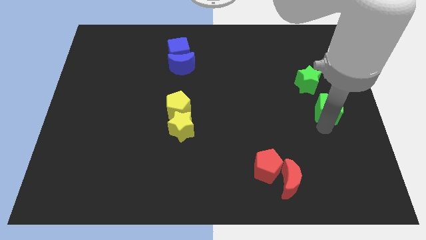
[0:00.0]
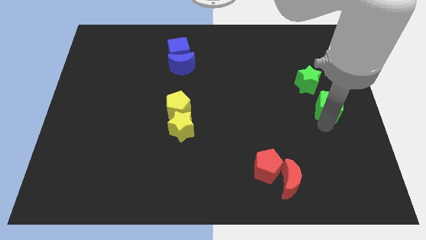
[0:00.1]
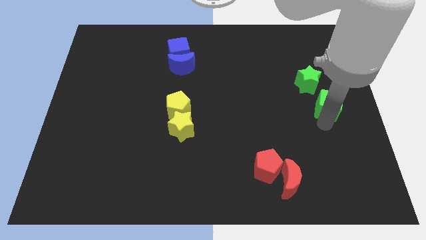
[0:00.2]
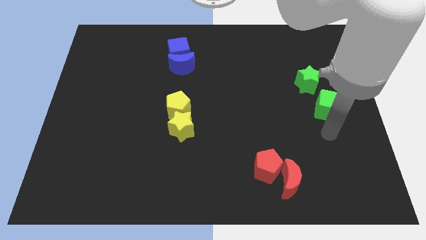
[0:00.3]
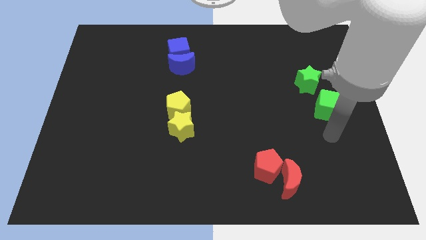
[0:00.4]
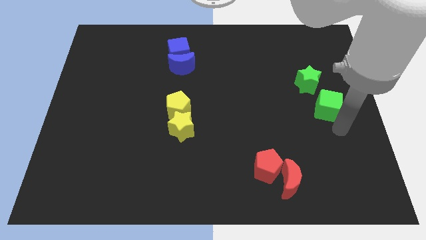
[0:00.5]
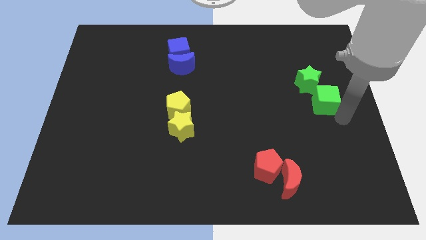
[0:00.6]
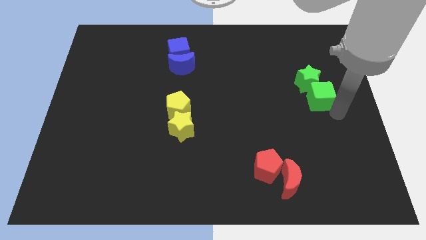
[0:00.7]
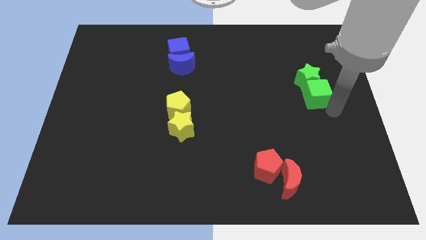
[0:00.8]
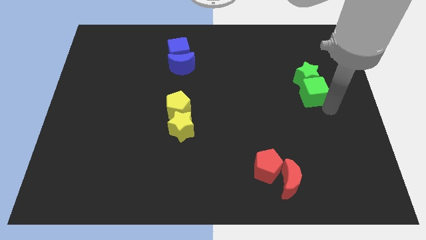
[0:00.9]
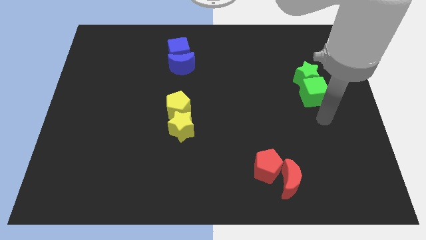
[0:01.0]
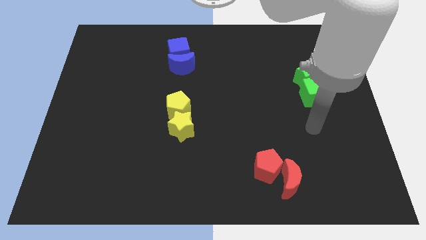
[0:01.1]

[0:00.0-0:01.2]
push the green cube into the green star

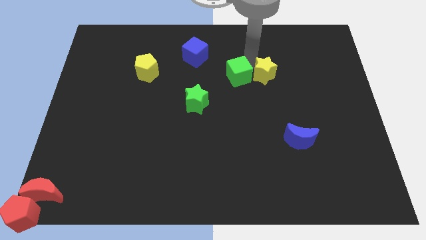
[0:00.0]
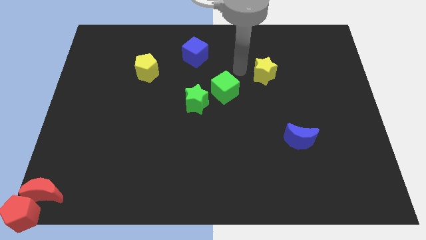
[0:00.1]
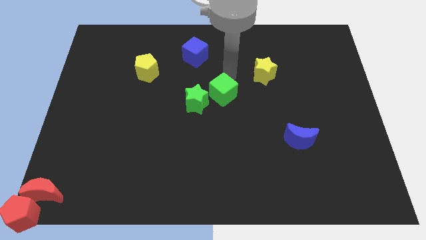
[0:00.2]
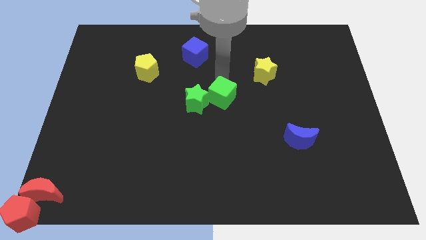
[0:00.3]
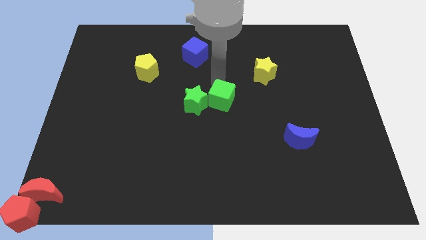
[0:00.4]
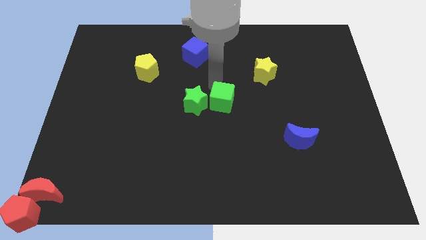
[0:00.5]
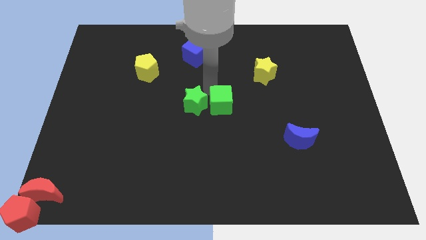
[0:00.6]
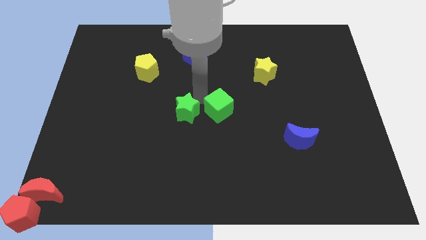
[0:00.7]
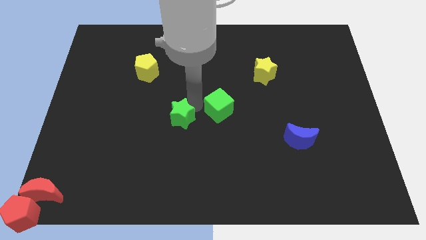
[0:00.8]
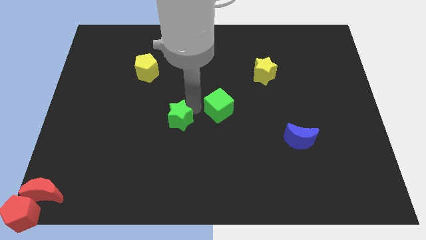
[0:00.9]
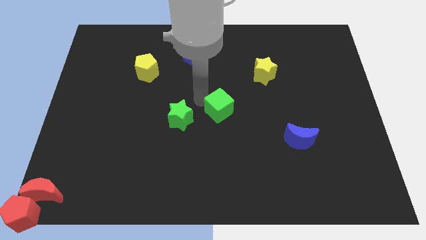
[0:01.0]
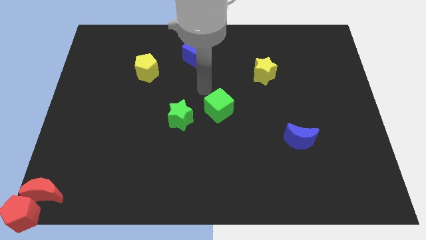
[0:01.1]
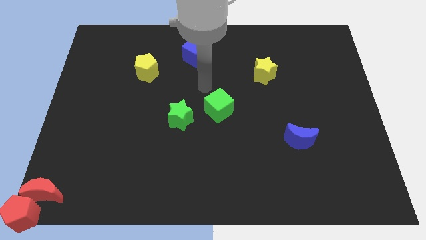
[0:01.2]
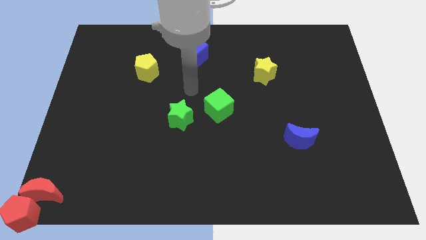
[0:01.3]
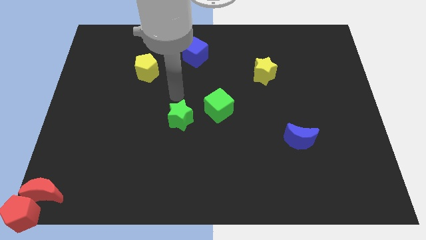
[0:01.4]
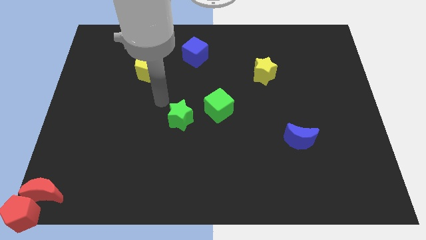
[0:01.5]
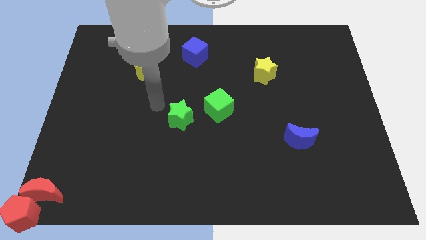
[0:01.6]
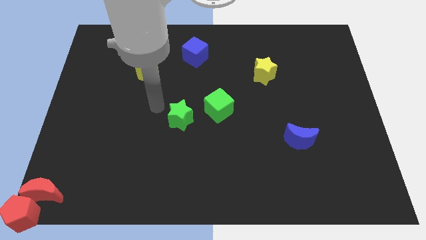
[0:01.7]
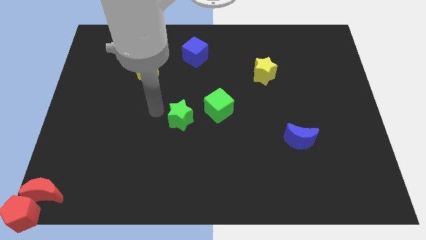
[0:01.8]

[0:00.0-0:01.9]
move green blocks downwards

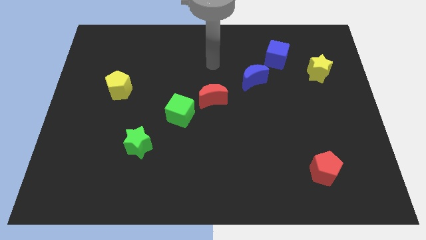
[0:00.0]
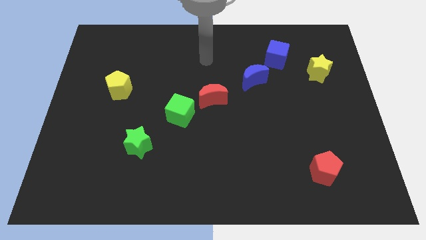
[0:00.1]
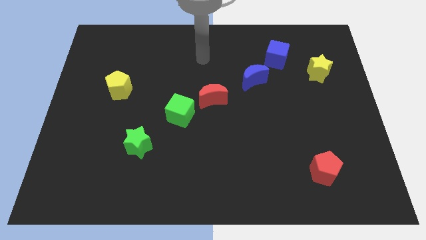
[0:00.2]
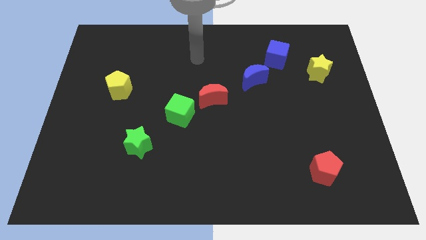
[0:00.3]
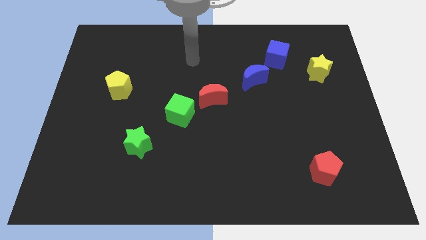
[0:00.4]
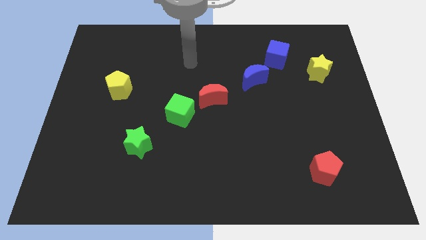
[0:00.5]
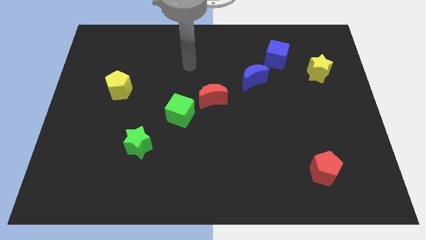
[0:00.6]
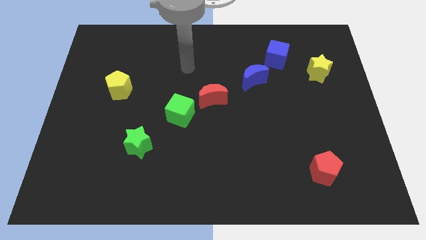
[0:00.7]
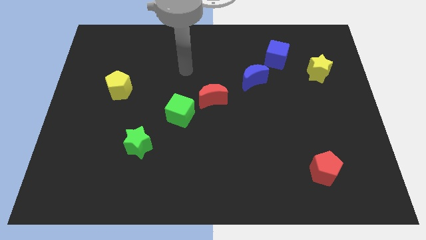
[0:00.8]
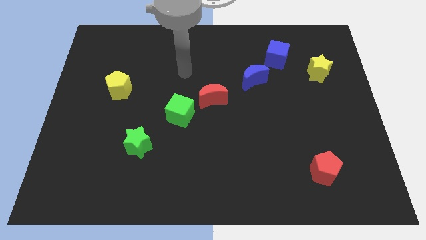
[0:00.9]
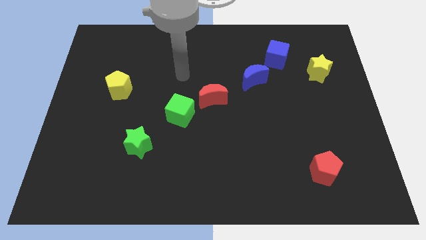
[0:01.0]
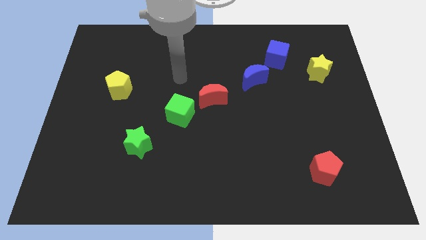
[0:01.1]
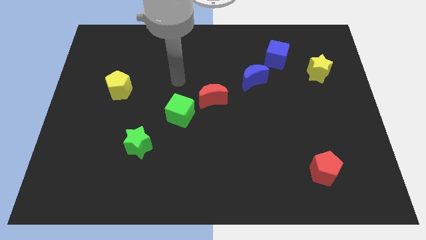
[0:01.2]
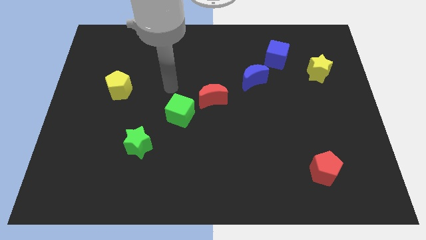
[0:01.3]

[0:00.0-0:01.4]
point your arm at the top of the green cube

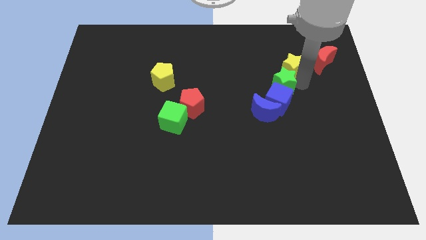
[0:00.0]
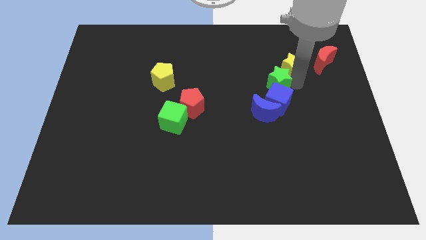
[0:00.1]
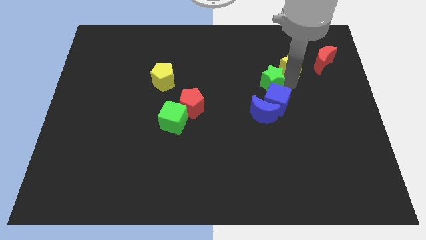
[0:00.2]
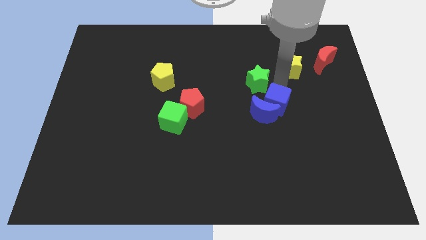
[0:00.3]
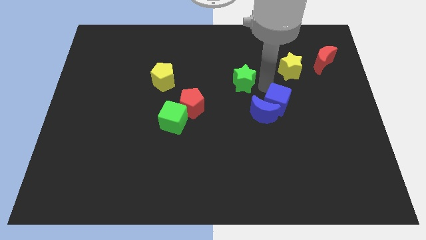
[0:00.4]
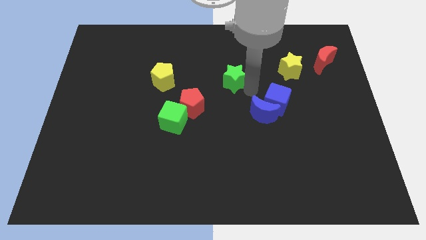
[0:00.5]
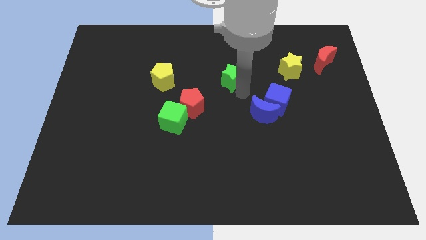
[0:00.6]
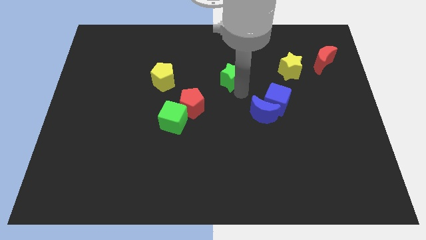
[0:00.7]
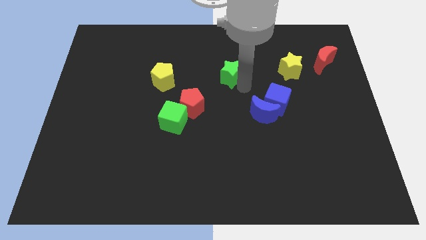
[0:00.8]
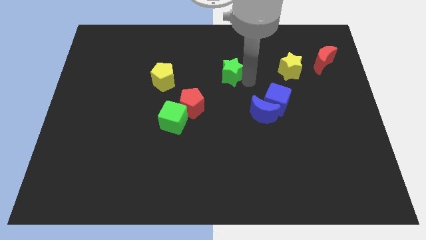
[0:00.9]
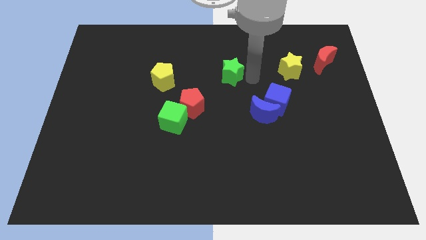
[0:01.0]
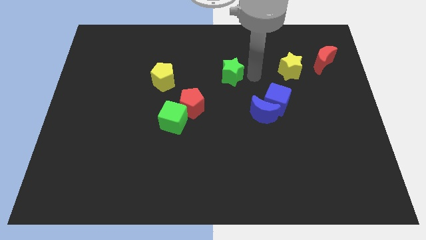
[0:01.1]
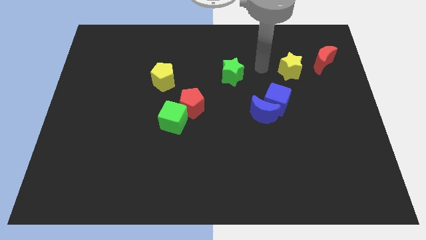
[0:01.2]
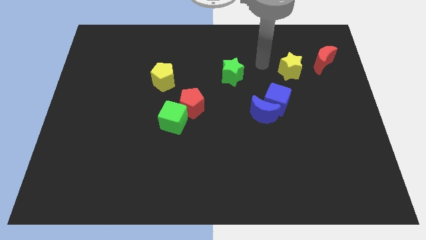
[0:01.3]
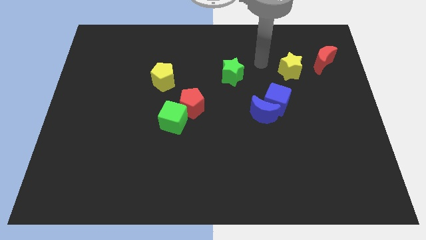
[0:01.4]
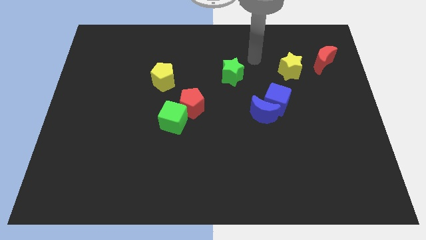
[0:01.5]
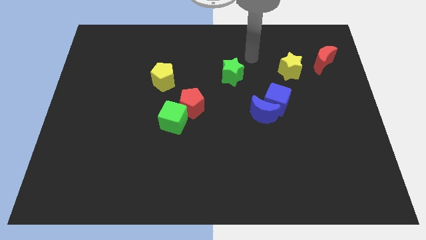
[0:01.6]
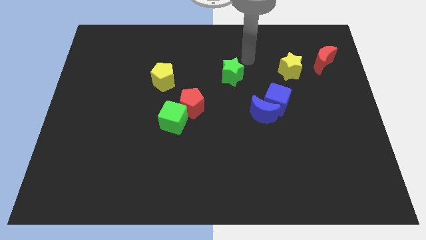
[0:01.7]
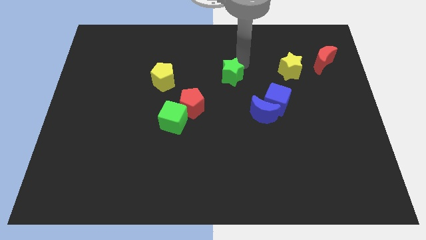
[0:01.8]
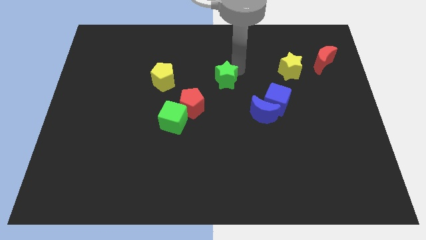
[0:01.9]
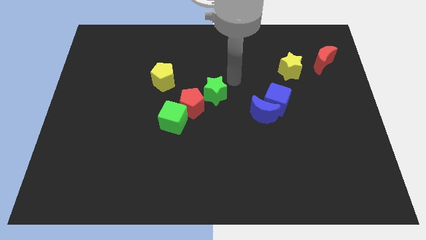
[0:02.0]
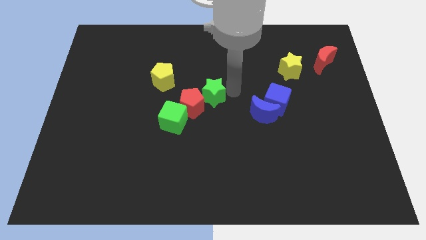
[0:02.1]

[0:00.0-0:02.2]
place the green star at the top right side of red pentagon

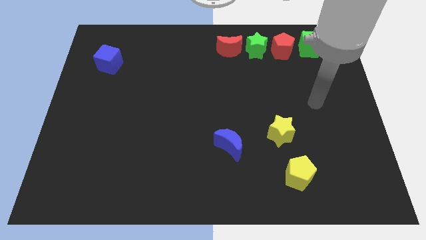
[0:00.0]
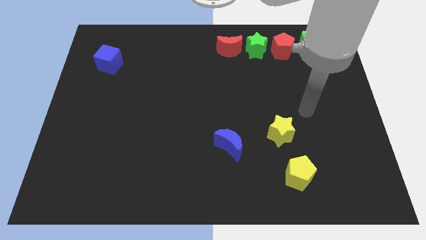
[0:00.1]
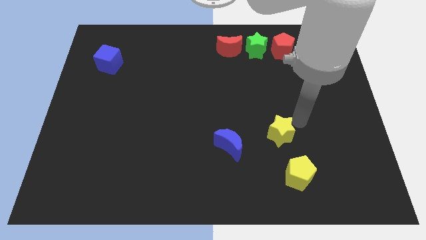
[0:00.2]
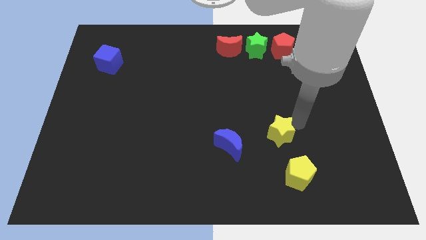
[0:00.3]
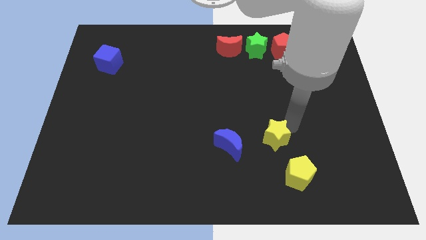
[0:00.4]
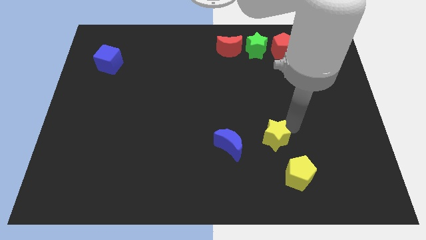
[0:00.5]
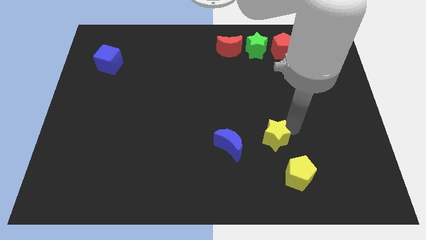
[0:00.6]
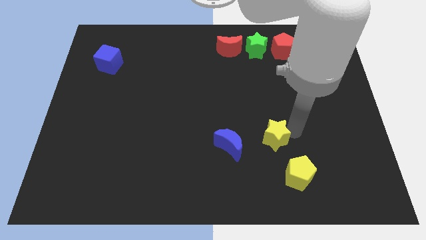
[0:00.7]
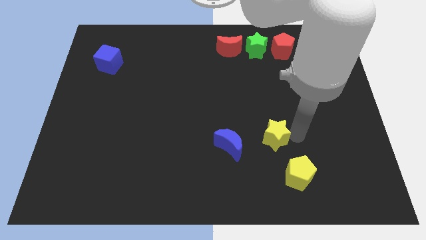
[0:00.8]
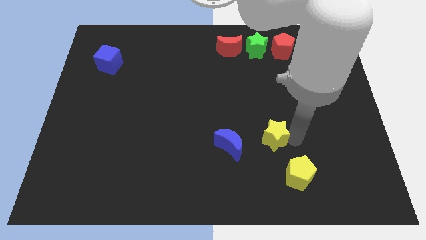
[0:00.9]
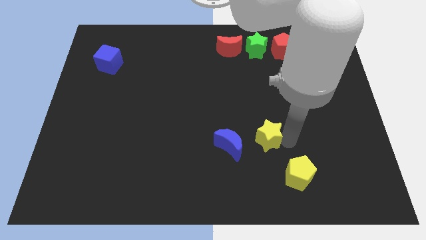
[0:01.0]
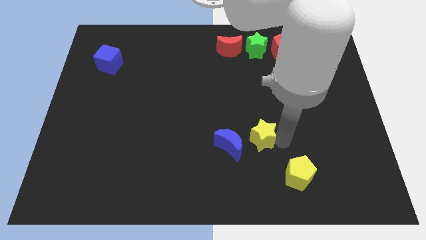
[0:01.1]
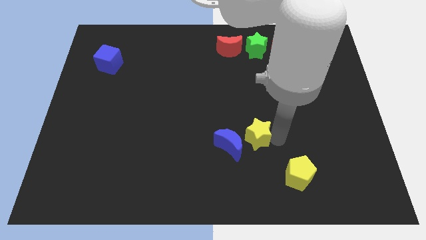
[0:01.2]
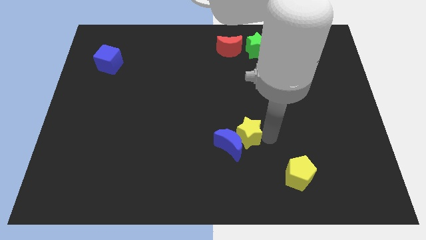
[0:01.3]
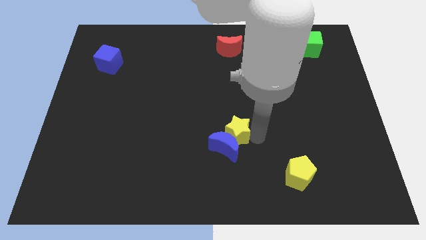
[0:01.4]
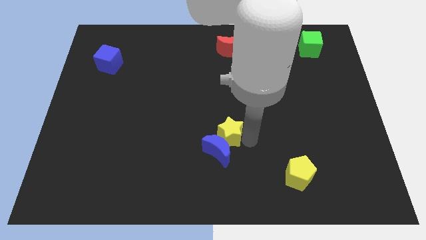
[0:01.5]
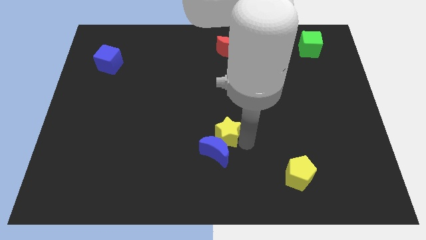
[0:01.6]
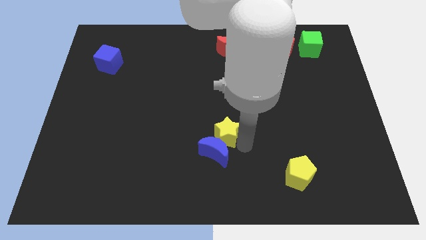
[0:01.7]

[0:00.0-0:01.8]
push yellow star into the blue crescent

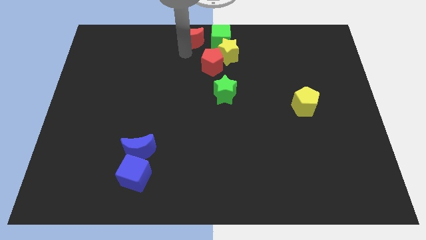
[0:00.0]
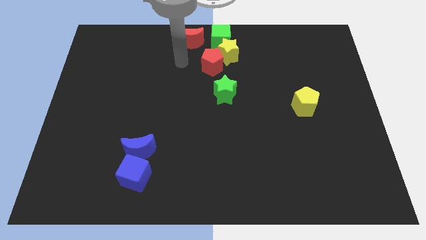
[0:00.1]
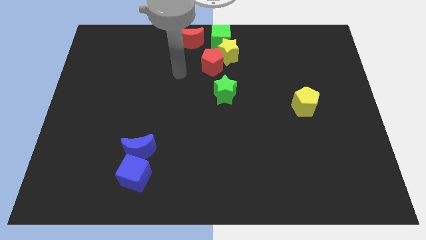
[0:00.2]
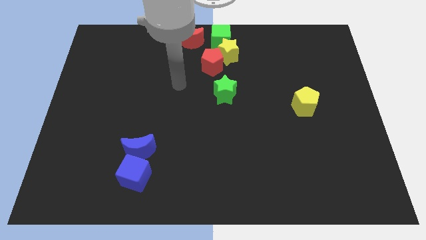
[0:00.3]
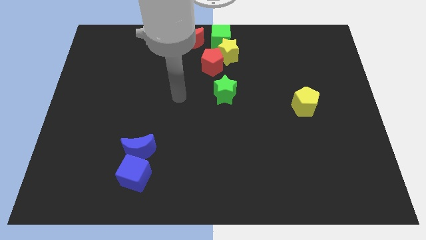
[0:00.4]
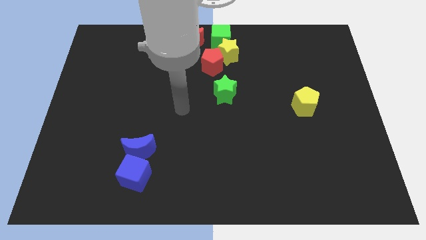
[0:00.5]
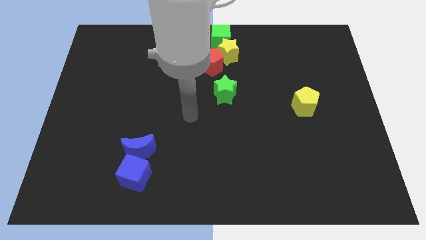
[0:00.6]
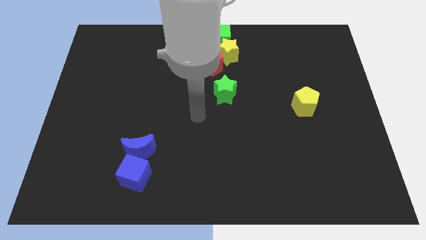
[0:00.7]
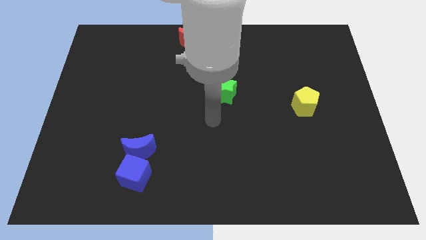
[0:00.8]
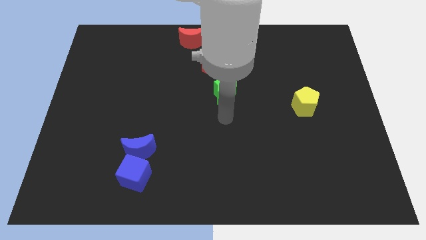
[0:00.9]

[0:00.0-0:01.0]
move your arm towards the green star
